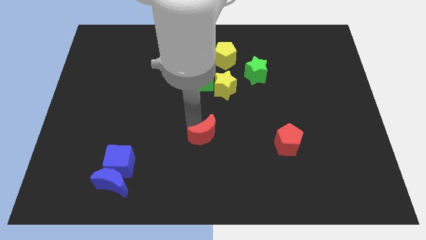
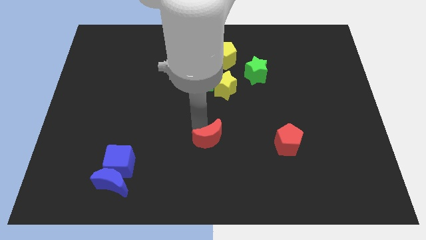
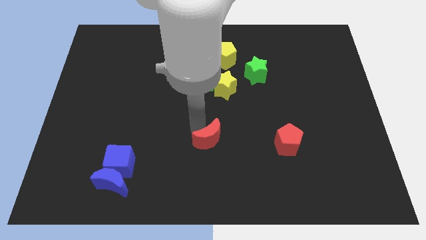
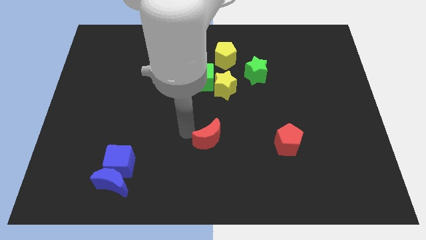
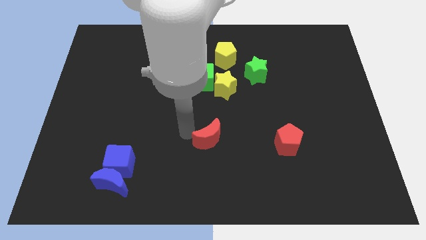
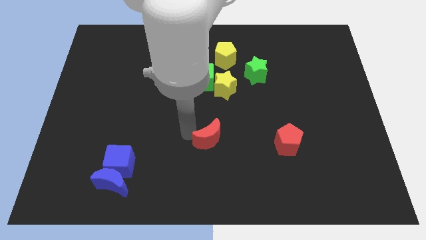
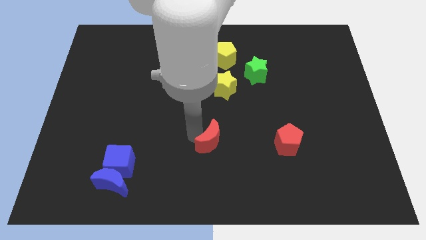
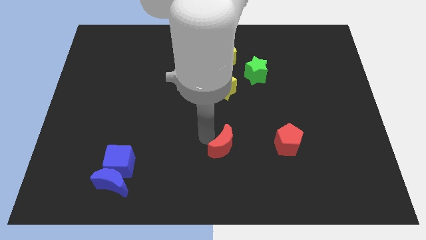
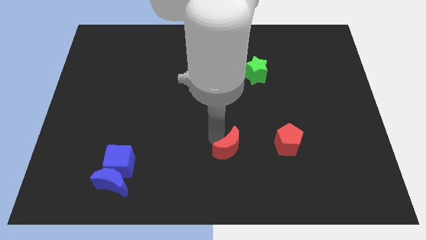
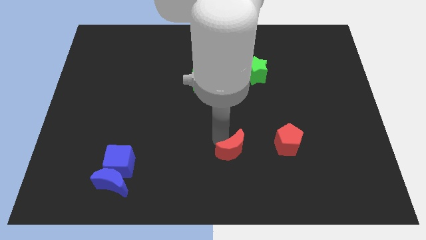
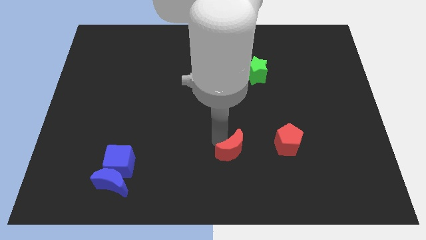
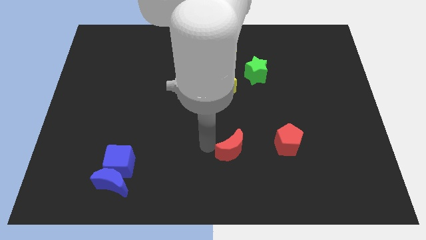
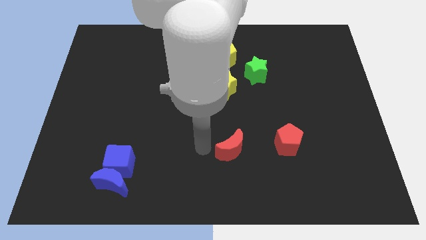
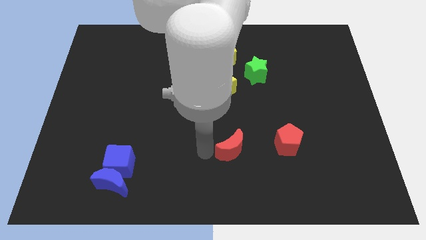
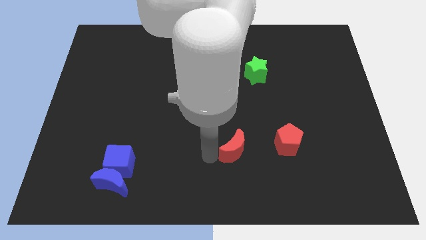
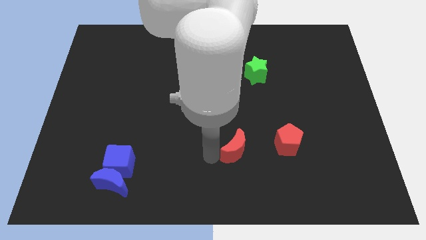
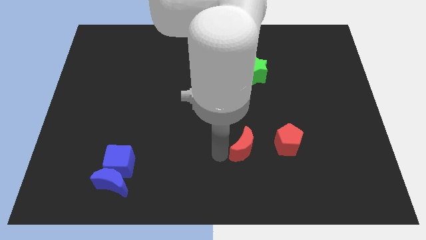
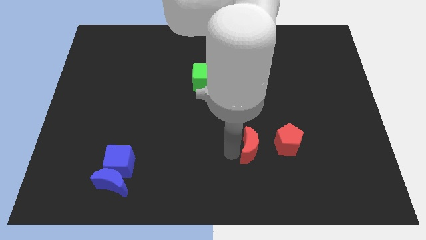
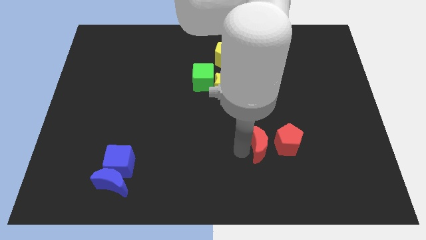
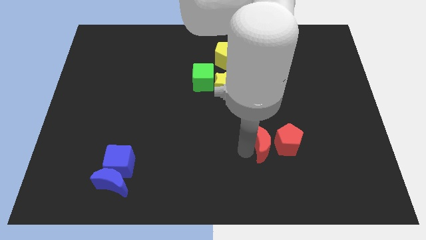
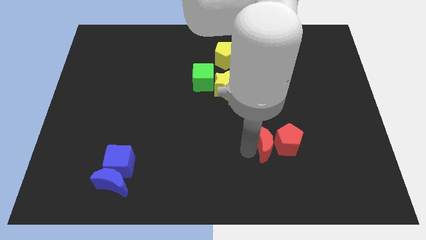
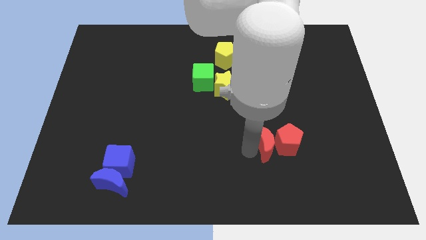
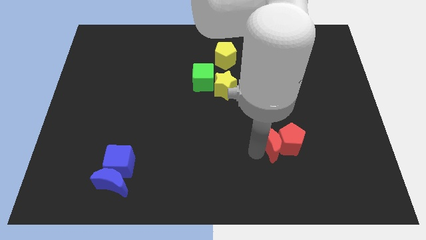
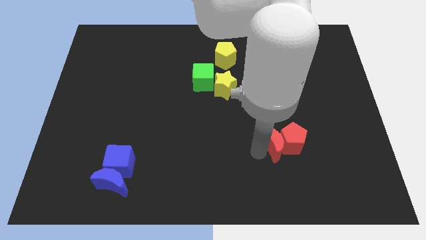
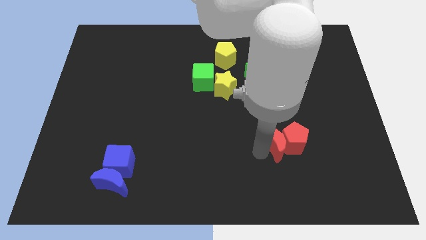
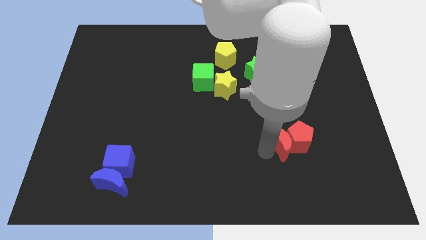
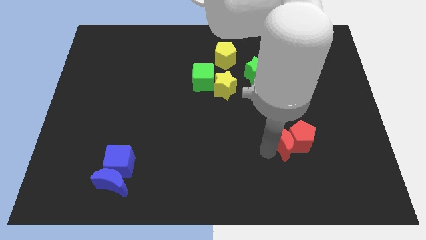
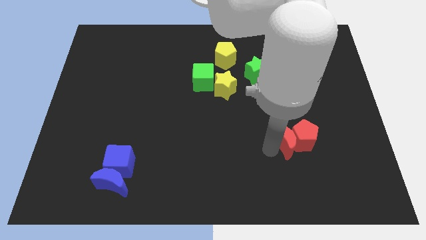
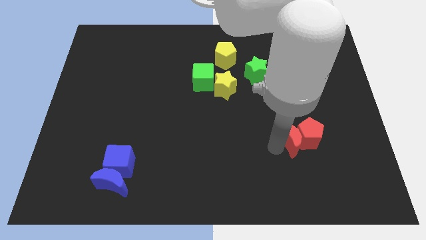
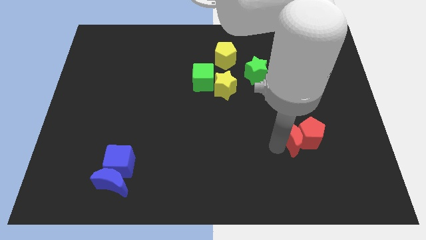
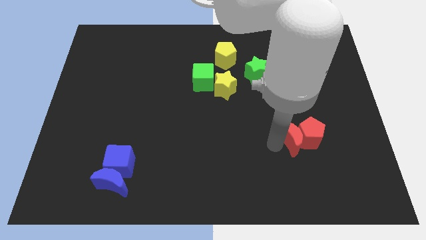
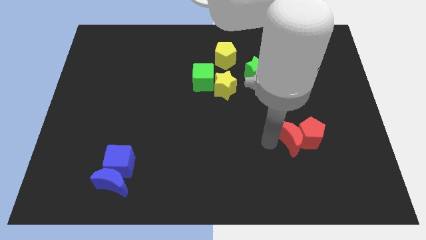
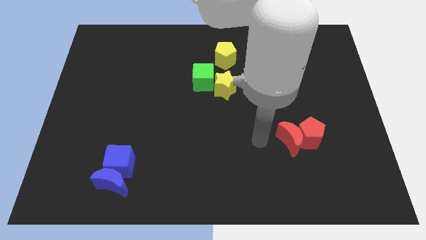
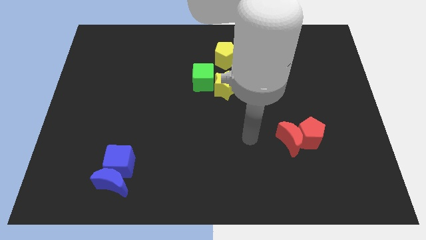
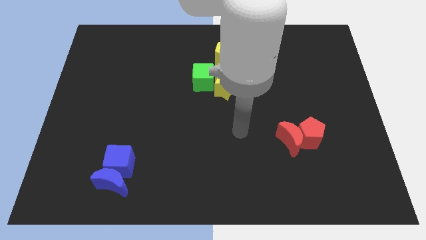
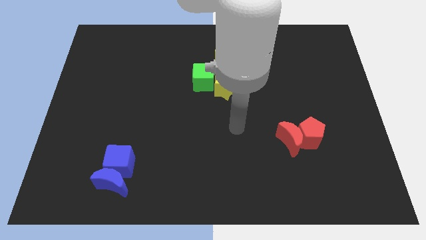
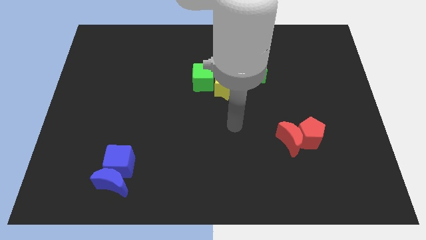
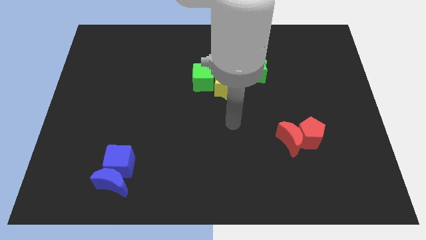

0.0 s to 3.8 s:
push the red moon into the red pentagon

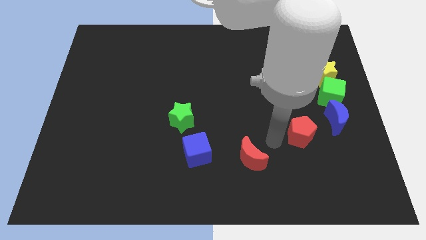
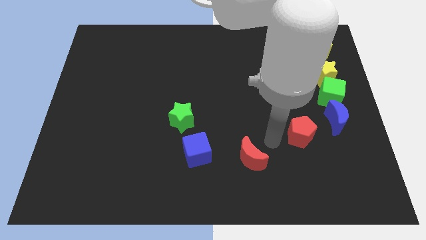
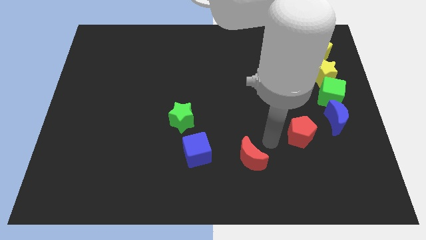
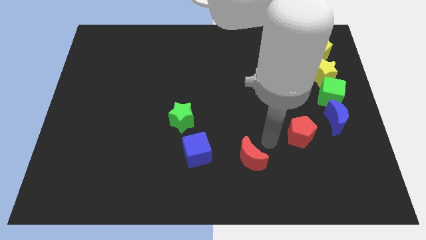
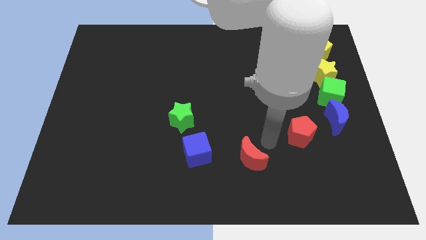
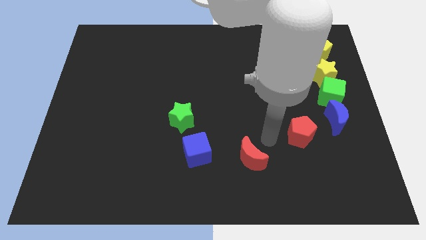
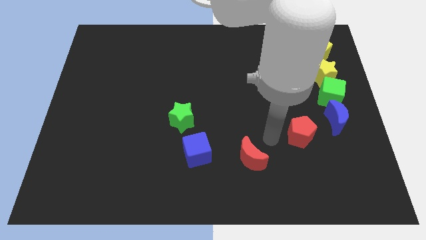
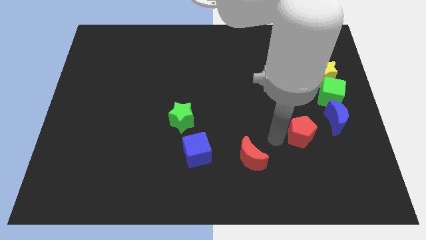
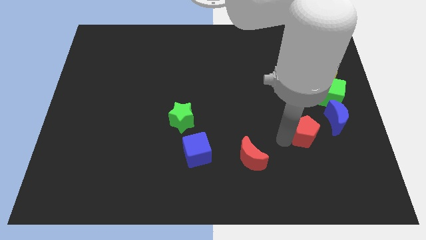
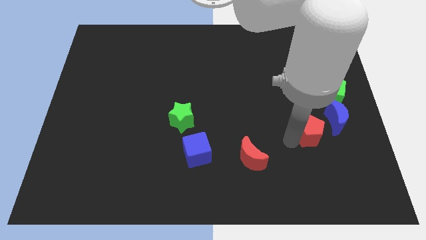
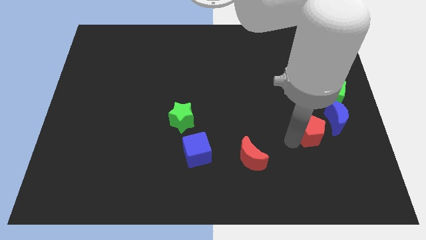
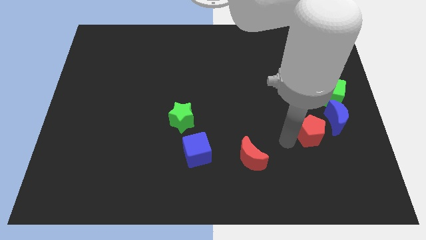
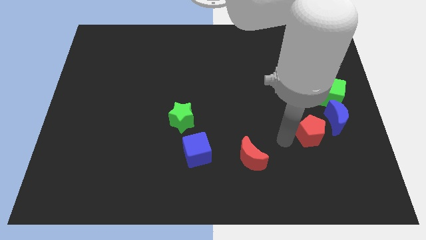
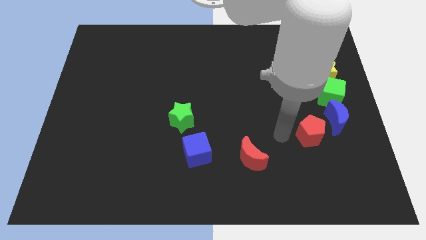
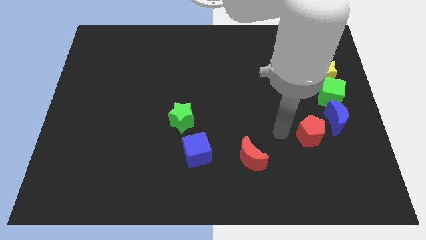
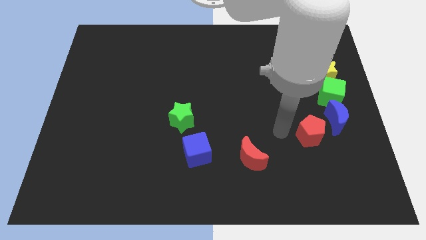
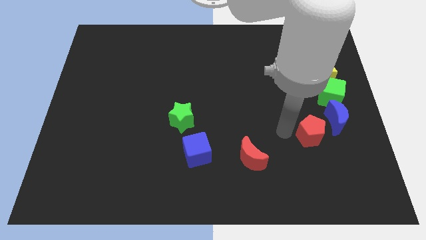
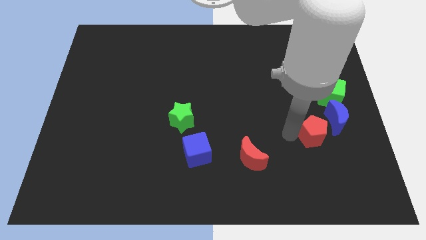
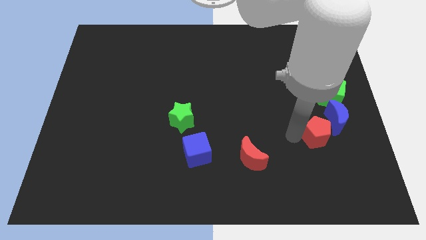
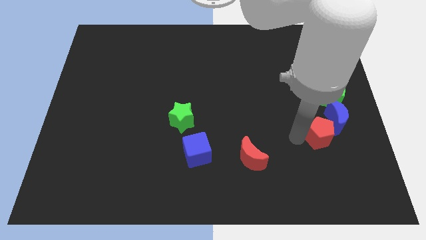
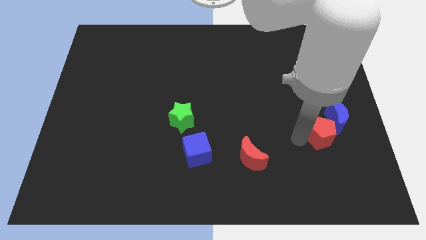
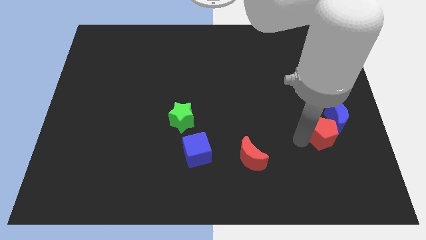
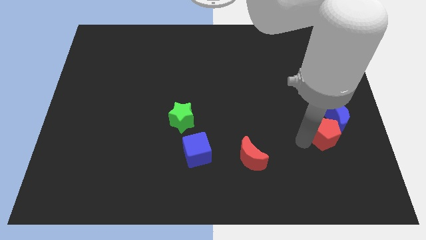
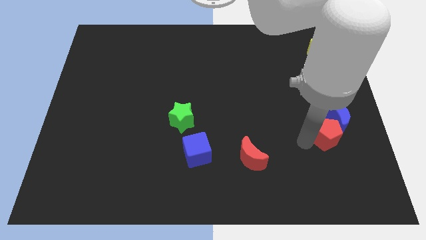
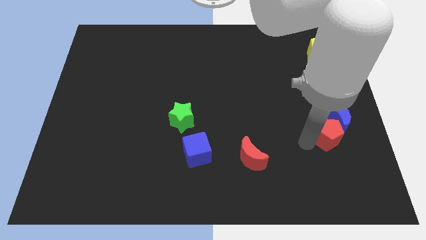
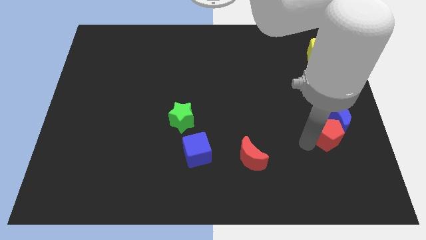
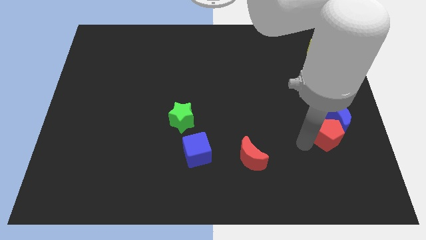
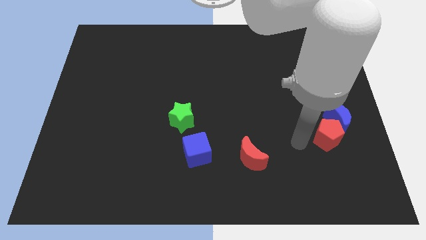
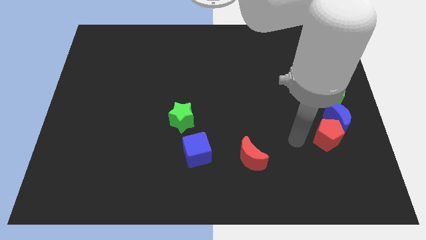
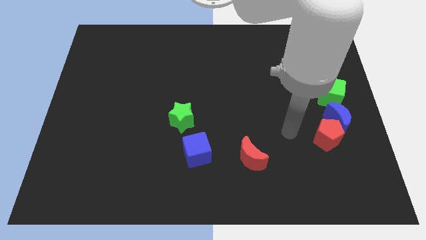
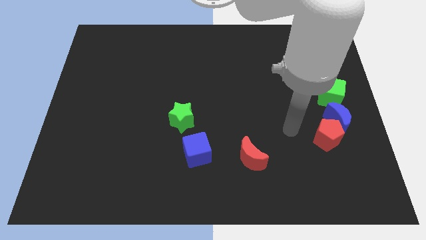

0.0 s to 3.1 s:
place the blue crescent towards the bottom left side of the blue crescent

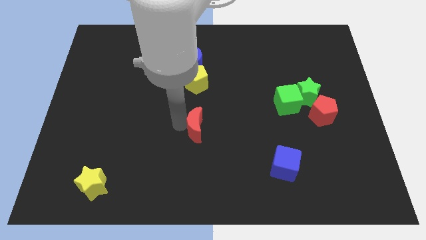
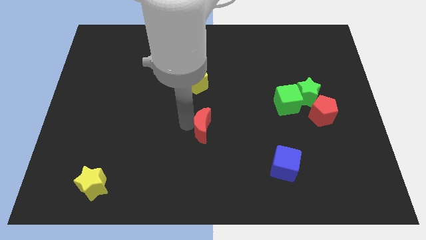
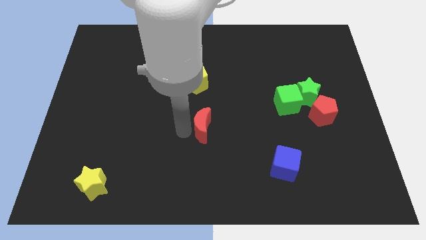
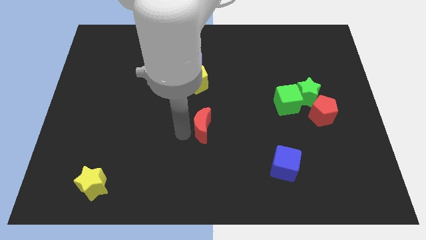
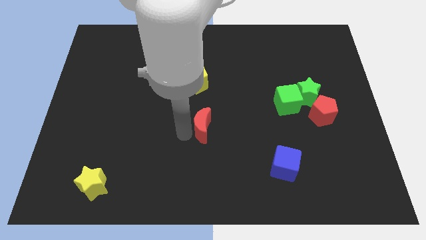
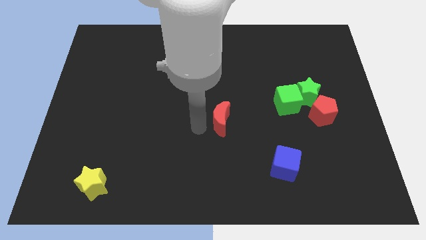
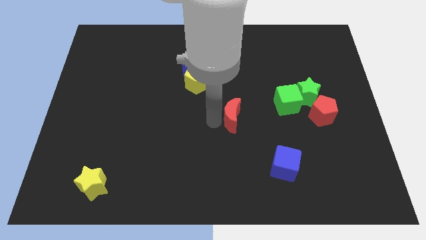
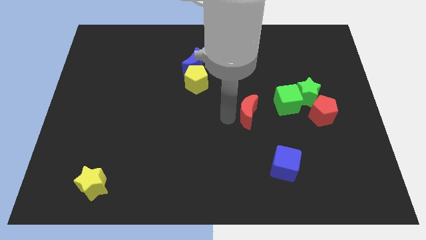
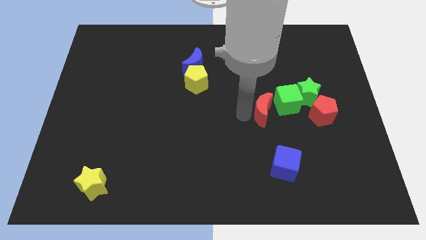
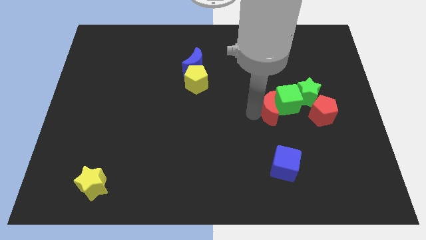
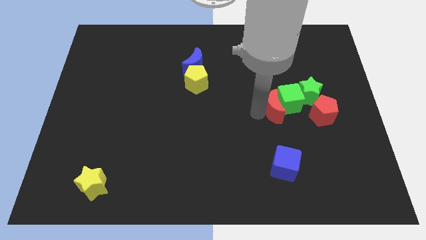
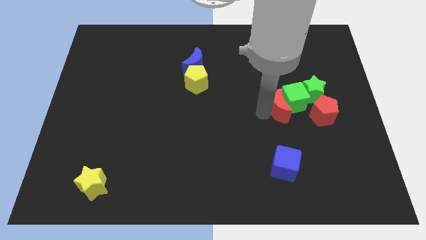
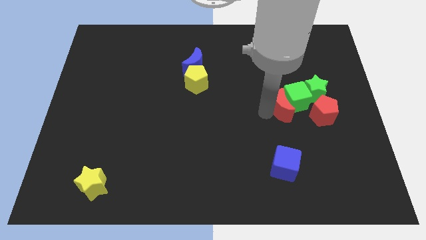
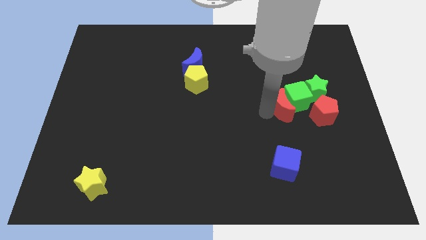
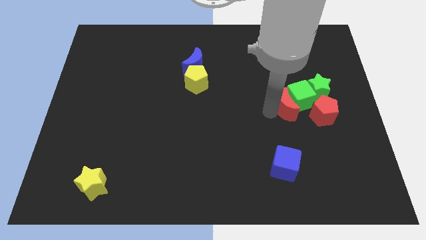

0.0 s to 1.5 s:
push the red moon into the green cube

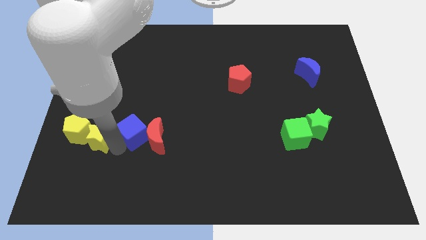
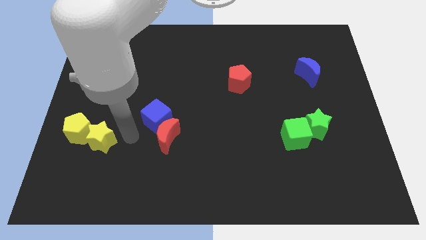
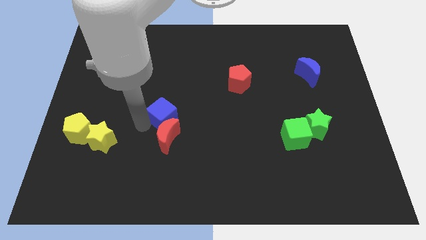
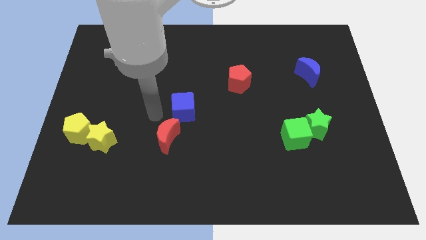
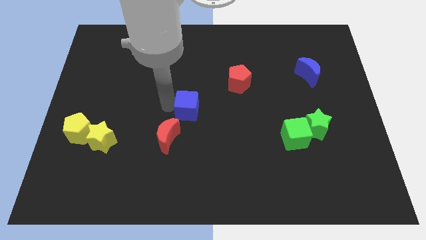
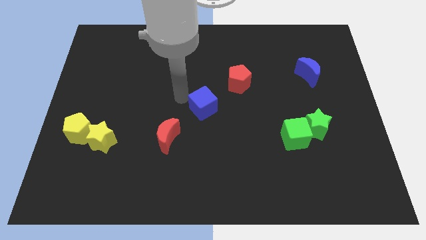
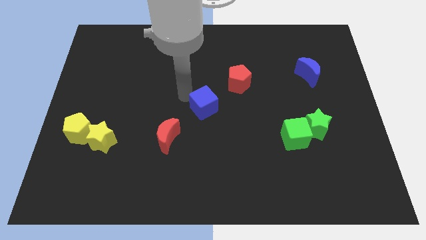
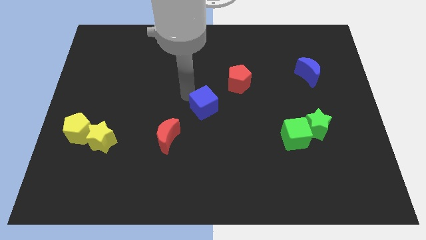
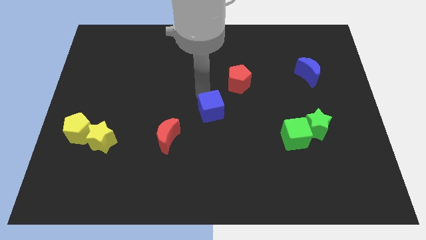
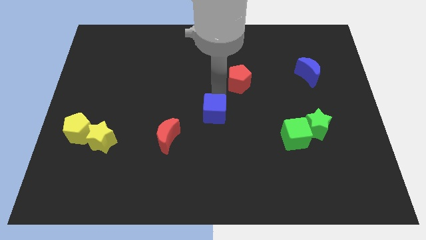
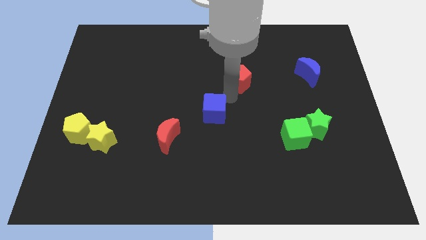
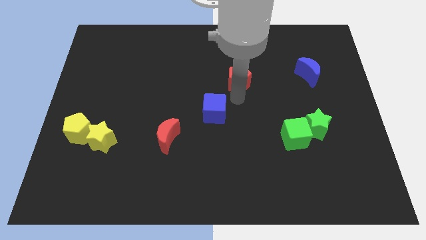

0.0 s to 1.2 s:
place the blue cube towards the bottom left side of the red pentagon
